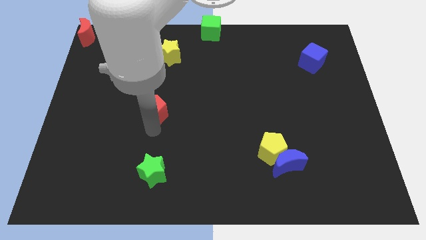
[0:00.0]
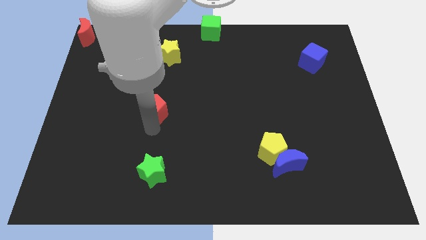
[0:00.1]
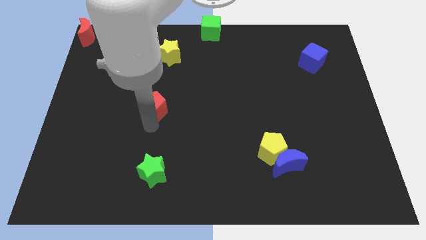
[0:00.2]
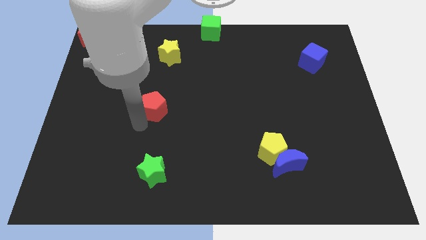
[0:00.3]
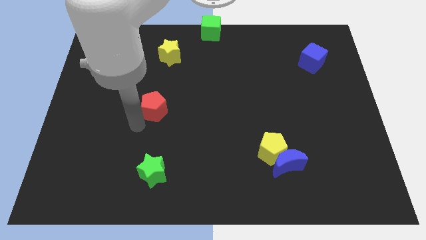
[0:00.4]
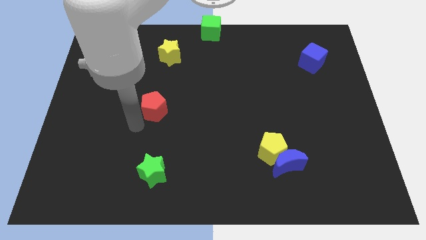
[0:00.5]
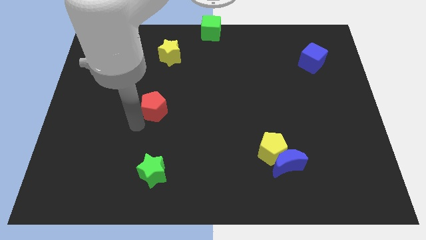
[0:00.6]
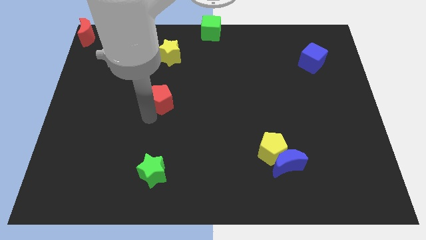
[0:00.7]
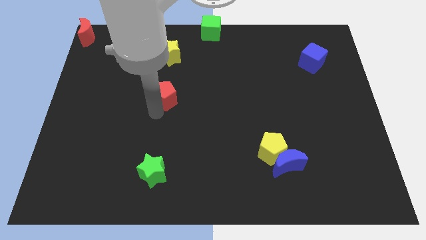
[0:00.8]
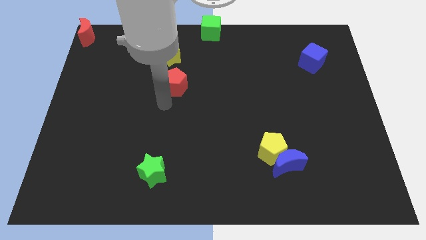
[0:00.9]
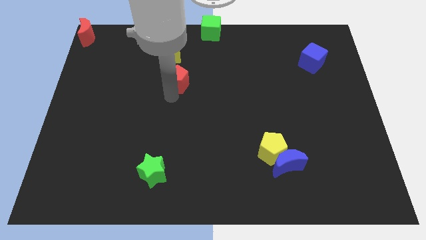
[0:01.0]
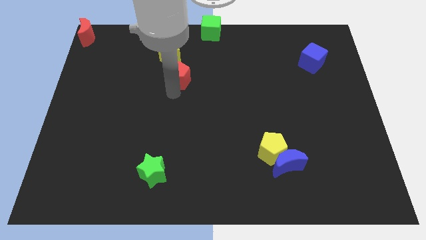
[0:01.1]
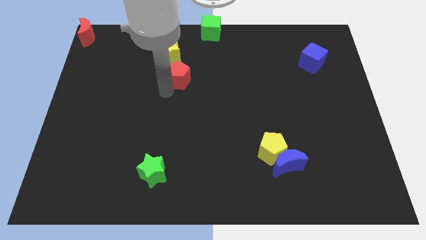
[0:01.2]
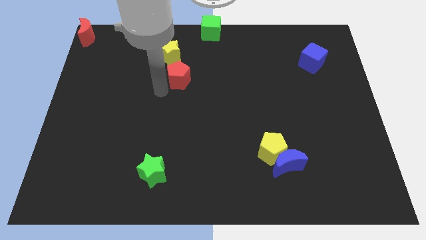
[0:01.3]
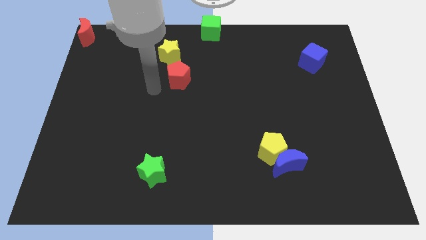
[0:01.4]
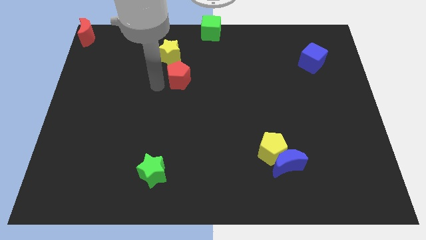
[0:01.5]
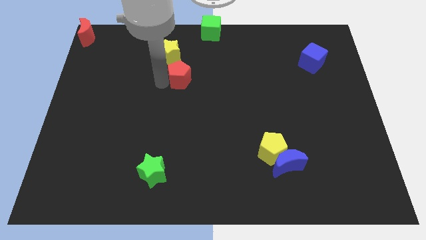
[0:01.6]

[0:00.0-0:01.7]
place red pentagon below yellow star

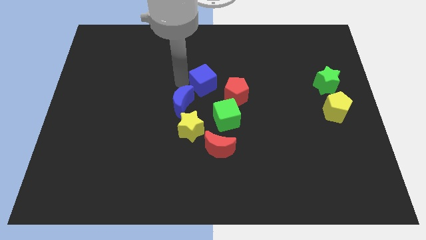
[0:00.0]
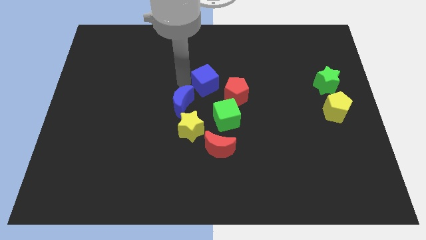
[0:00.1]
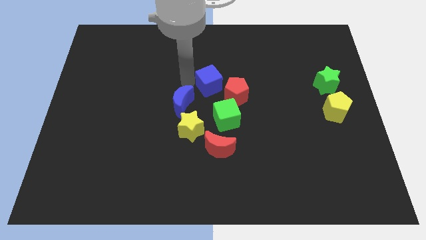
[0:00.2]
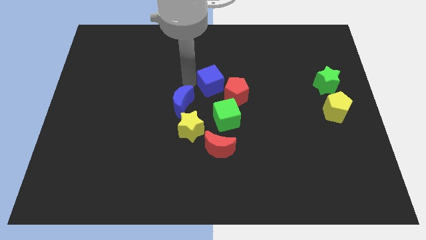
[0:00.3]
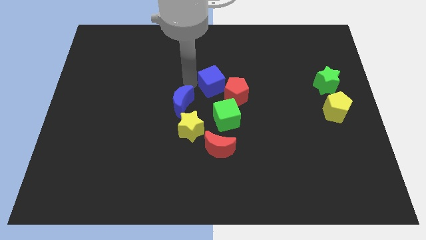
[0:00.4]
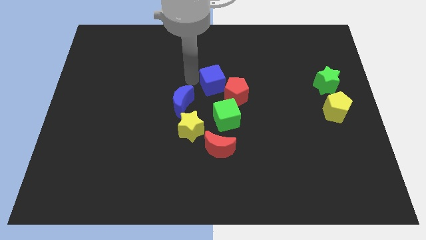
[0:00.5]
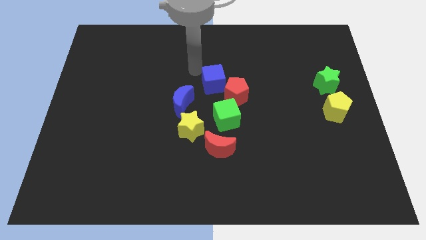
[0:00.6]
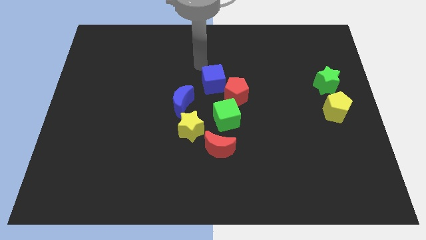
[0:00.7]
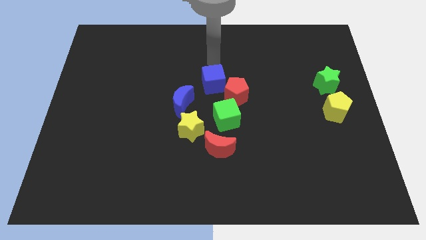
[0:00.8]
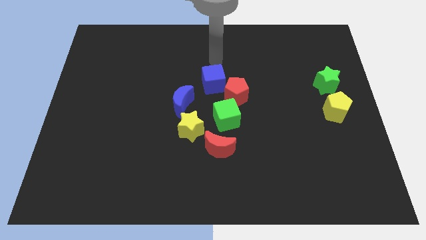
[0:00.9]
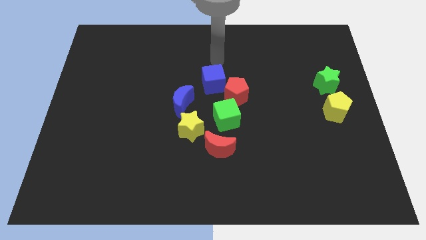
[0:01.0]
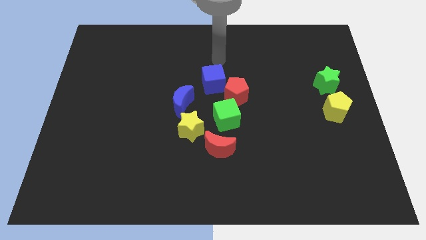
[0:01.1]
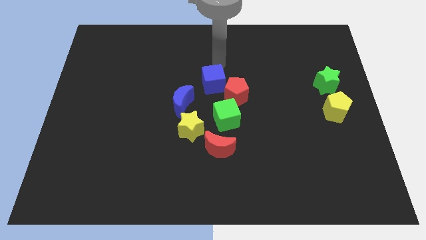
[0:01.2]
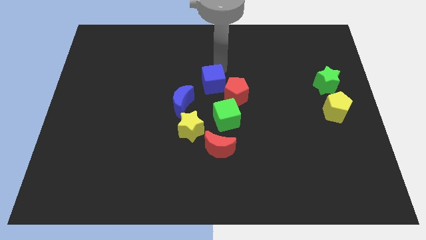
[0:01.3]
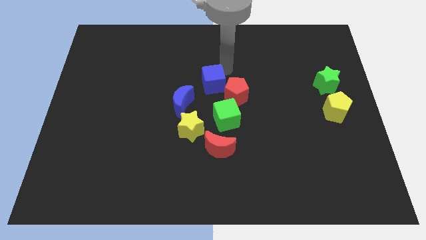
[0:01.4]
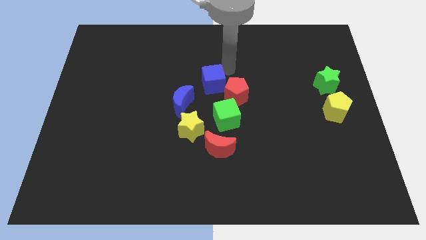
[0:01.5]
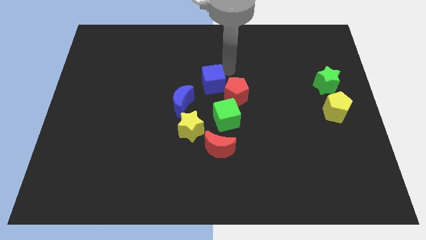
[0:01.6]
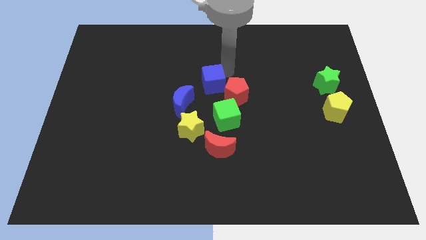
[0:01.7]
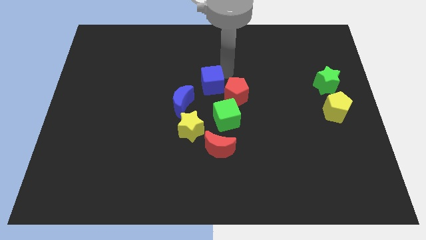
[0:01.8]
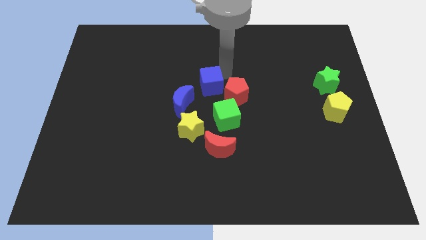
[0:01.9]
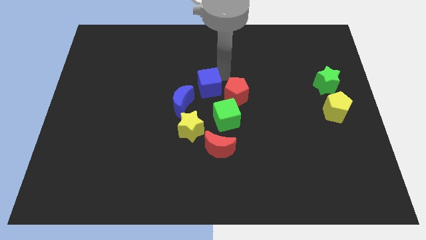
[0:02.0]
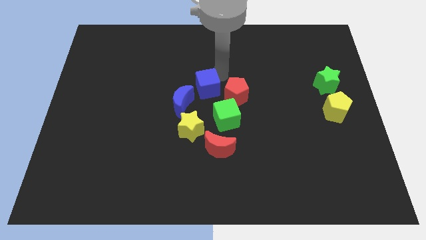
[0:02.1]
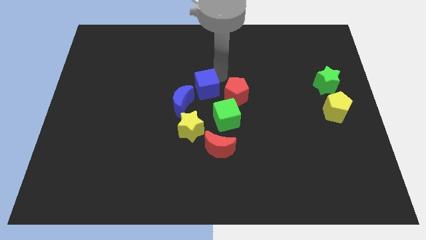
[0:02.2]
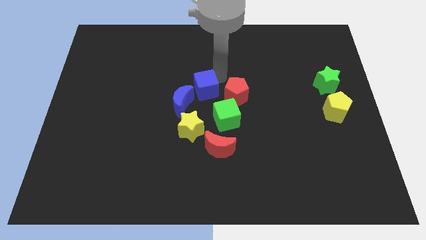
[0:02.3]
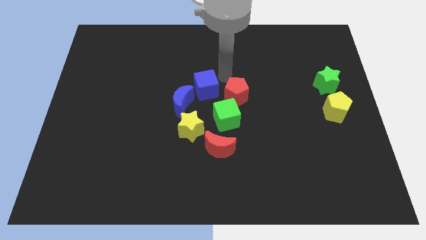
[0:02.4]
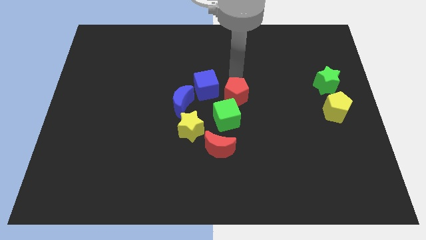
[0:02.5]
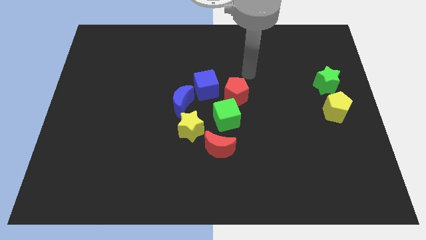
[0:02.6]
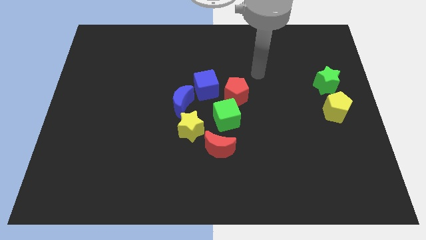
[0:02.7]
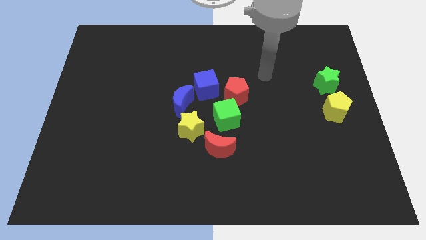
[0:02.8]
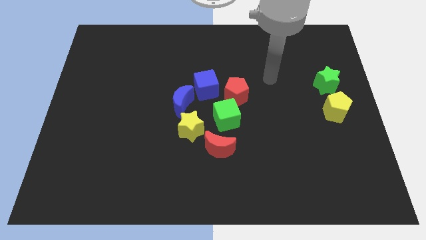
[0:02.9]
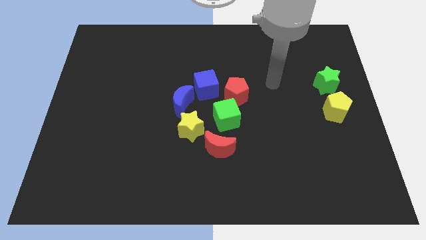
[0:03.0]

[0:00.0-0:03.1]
move the blue cube closer to the blue crescent

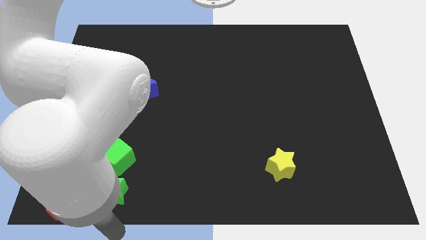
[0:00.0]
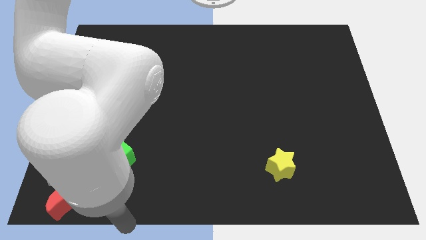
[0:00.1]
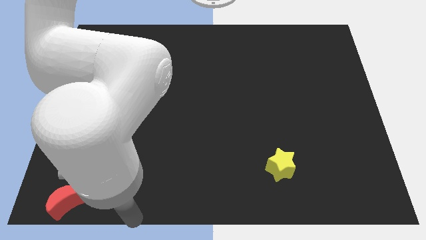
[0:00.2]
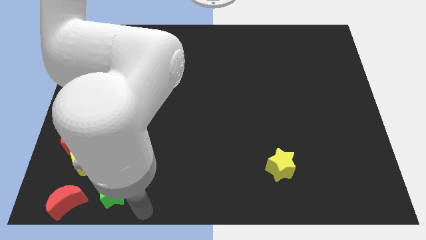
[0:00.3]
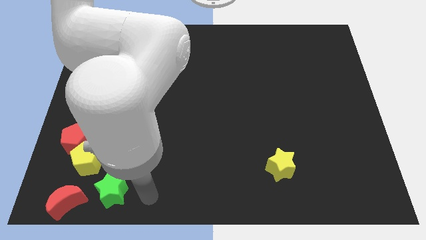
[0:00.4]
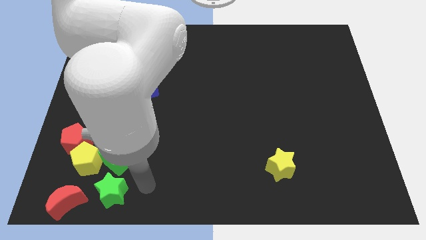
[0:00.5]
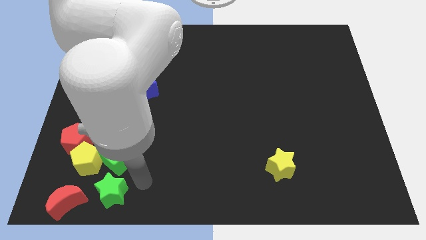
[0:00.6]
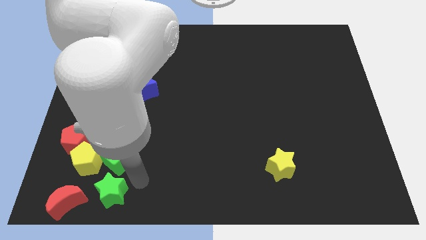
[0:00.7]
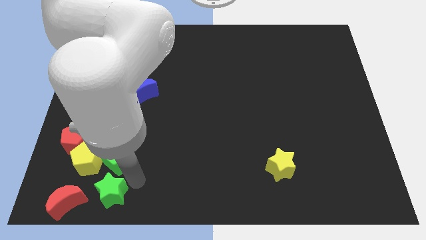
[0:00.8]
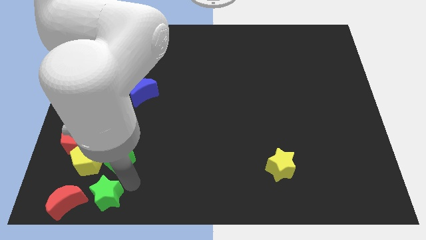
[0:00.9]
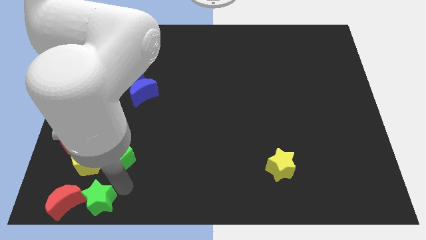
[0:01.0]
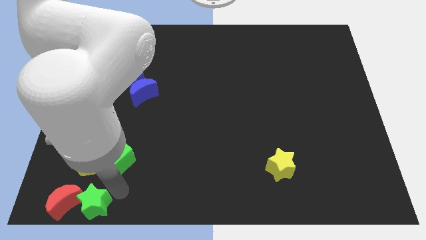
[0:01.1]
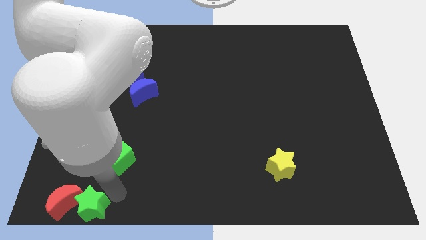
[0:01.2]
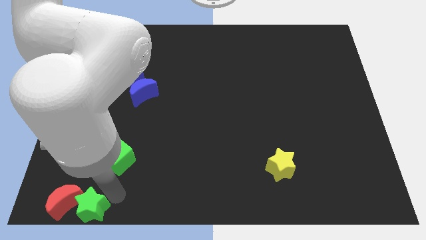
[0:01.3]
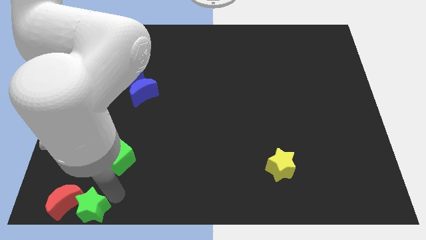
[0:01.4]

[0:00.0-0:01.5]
push green star towards red moon

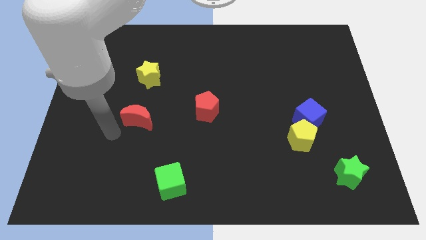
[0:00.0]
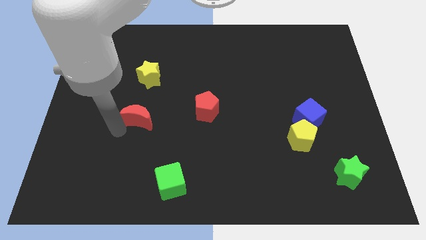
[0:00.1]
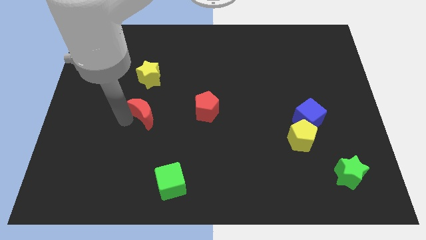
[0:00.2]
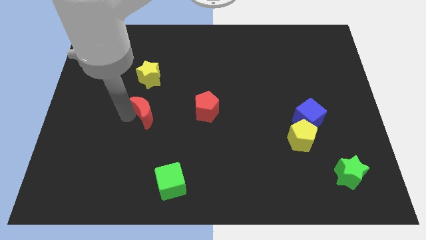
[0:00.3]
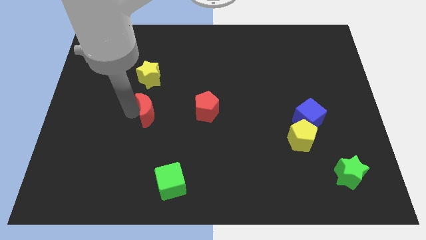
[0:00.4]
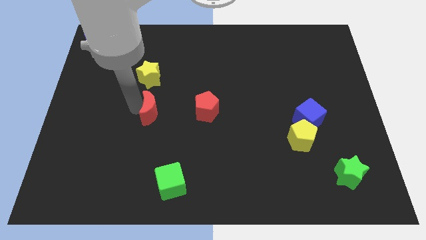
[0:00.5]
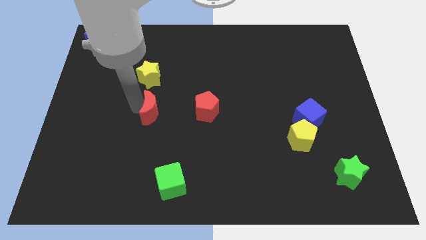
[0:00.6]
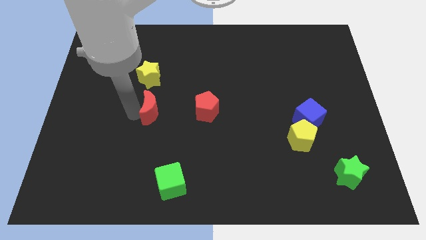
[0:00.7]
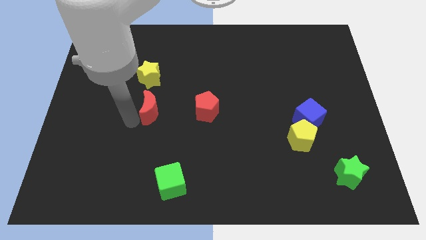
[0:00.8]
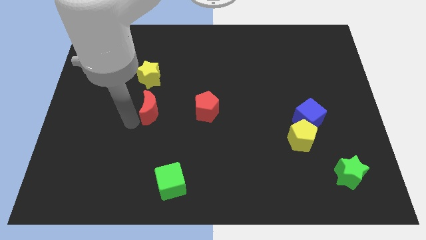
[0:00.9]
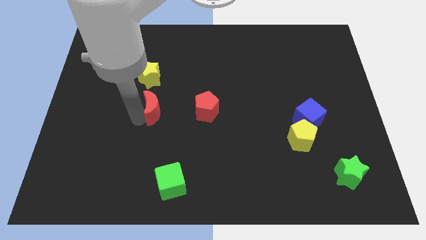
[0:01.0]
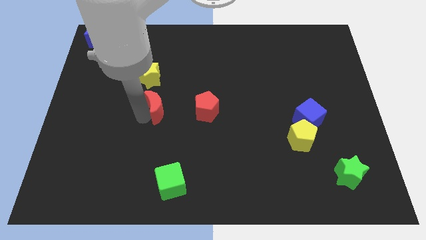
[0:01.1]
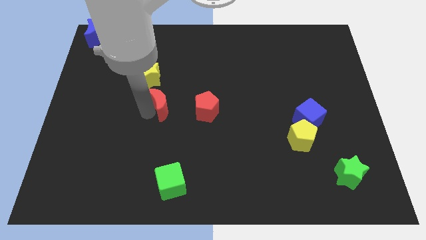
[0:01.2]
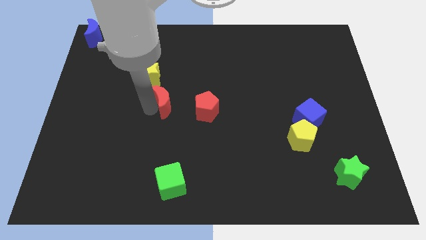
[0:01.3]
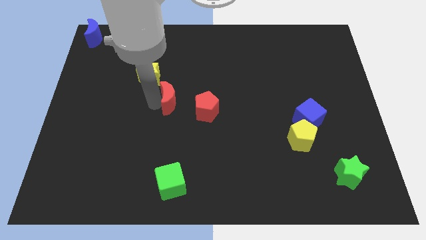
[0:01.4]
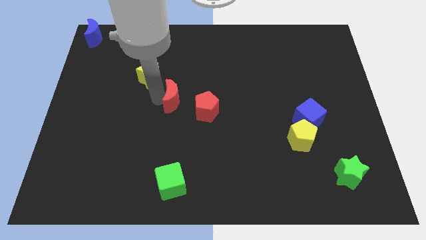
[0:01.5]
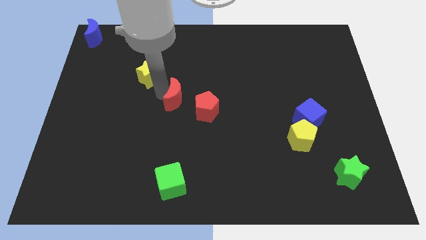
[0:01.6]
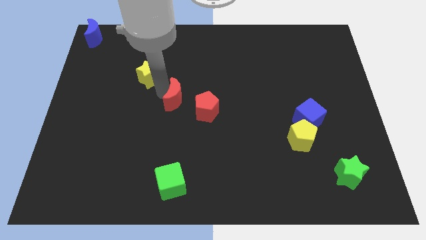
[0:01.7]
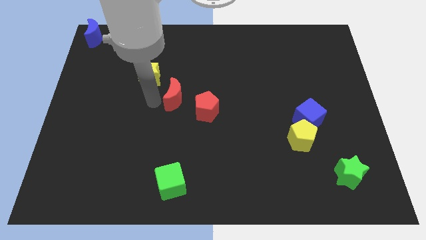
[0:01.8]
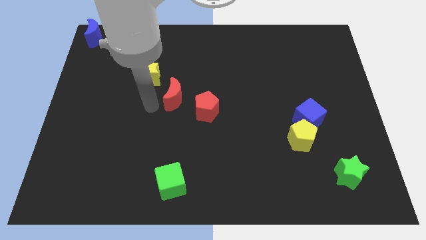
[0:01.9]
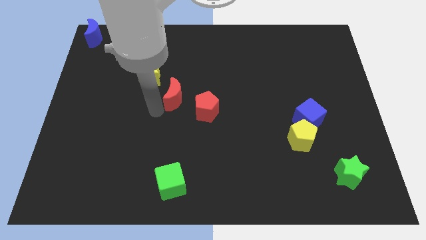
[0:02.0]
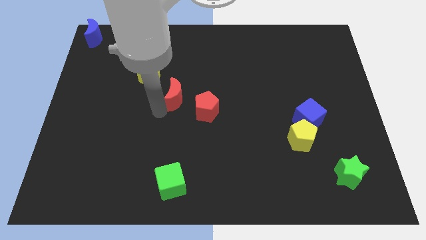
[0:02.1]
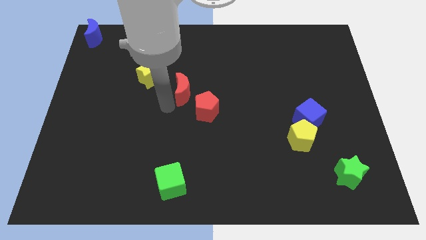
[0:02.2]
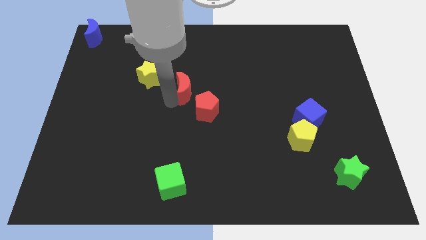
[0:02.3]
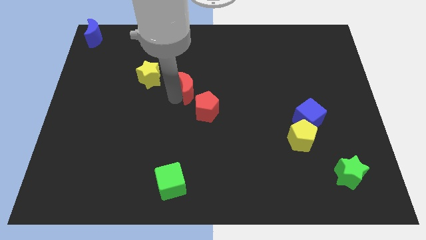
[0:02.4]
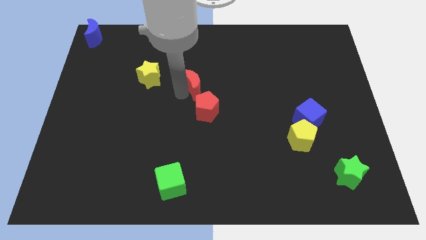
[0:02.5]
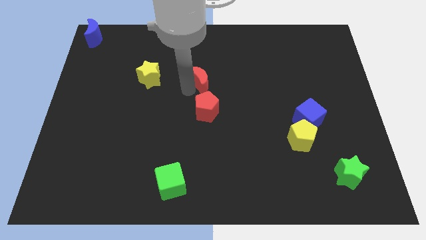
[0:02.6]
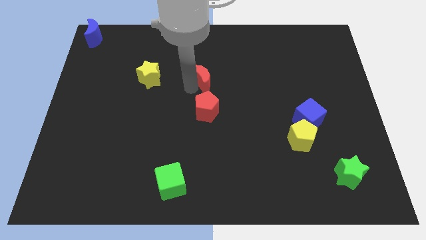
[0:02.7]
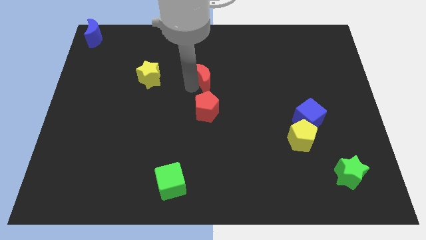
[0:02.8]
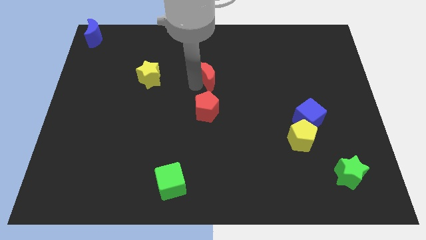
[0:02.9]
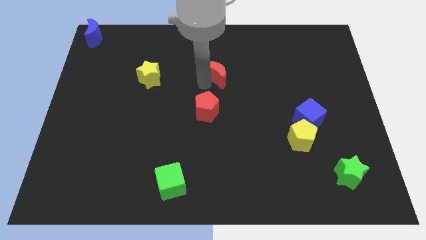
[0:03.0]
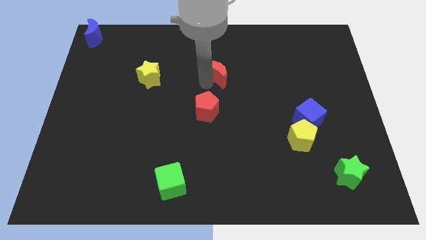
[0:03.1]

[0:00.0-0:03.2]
move red moon above the red pentagon
